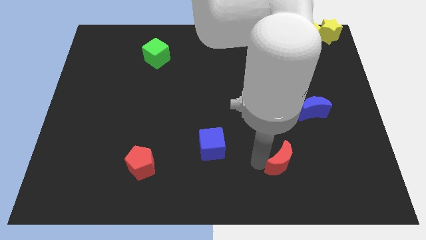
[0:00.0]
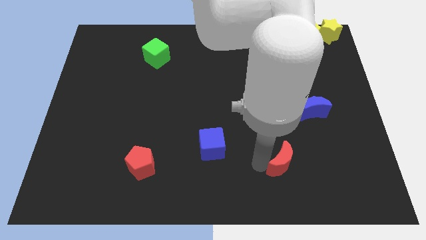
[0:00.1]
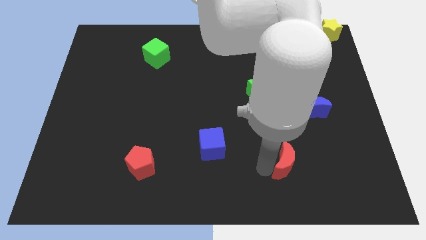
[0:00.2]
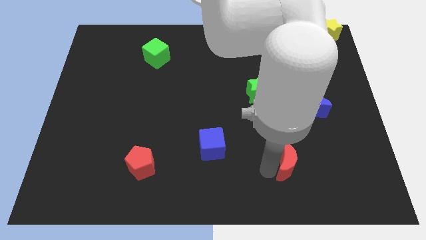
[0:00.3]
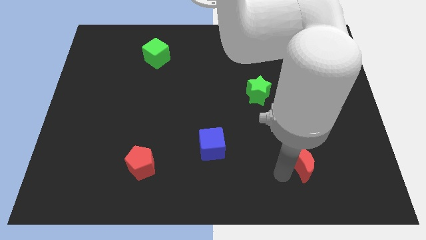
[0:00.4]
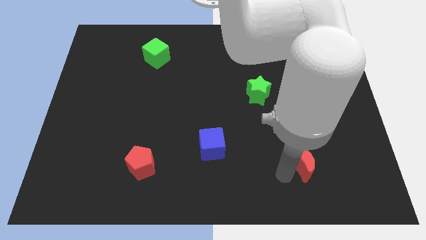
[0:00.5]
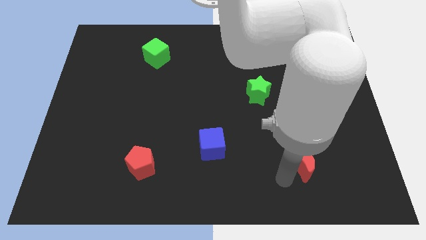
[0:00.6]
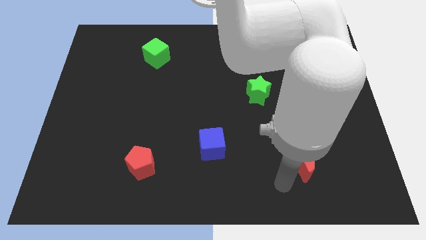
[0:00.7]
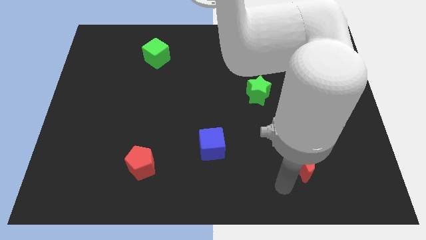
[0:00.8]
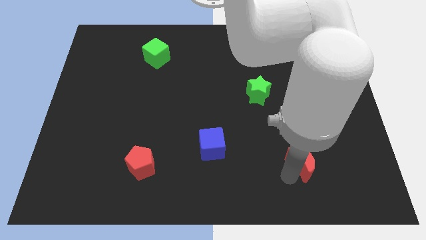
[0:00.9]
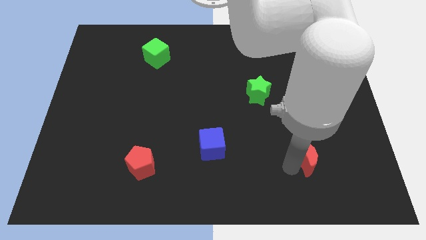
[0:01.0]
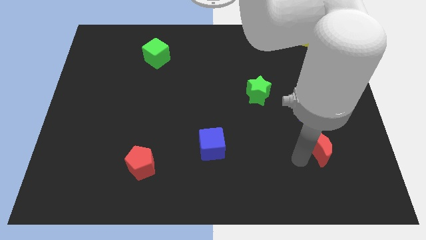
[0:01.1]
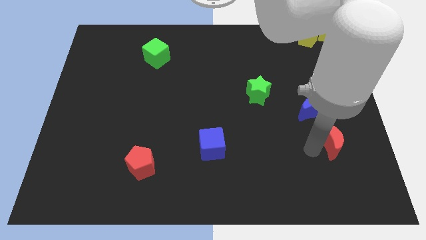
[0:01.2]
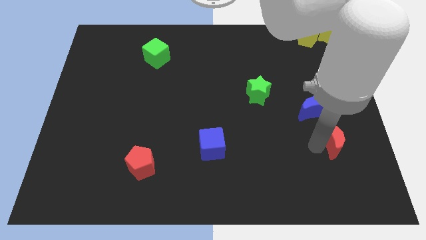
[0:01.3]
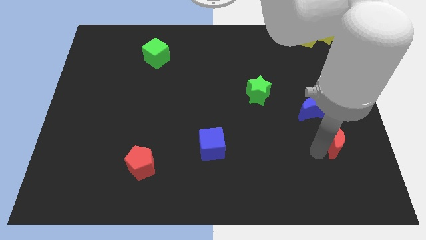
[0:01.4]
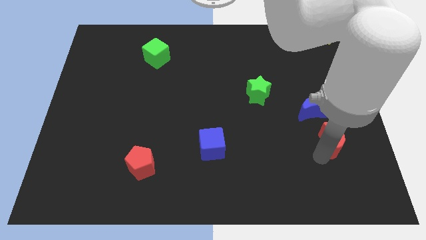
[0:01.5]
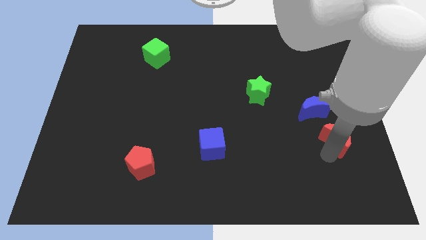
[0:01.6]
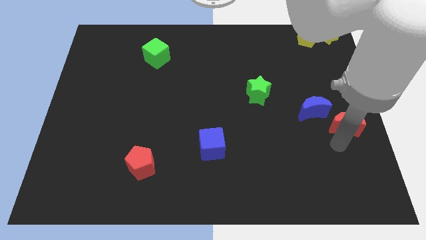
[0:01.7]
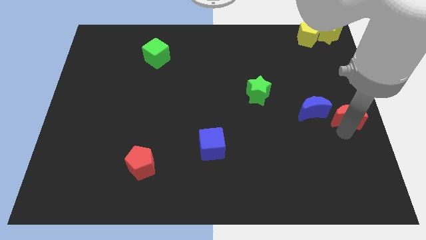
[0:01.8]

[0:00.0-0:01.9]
move the red crescent towards the blue crescent

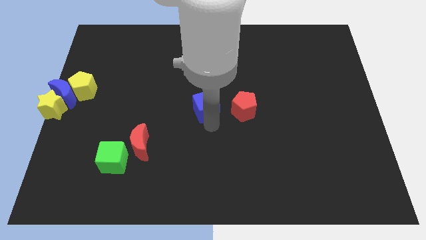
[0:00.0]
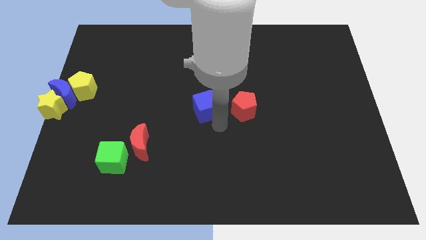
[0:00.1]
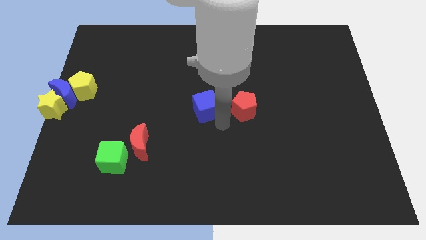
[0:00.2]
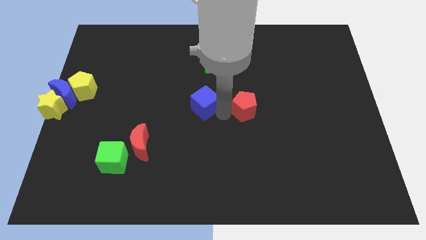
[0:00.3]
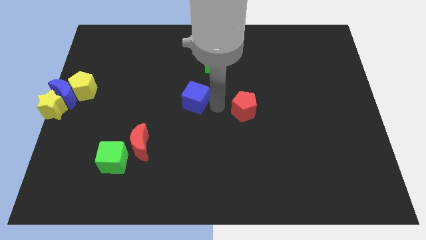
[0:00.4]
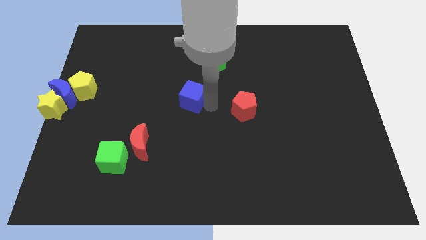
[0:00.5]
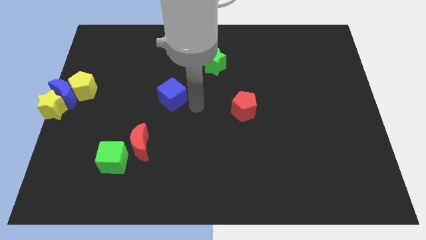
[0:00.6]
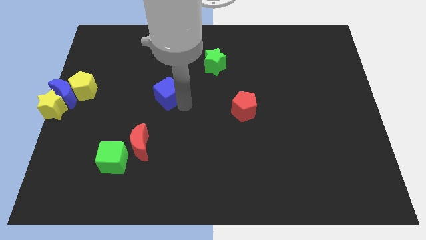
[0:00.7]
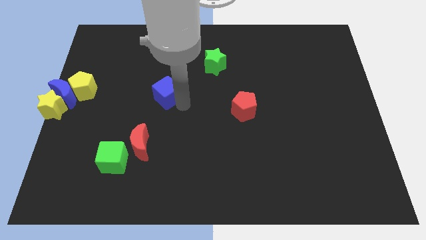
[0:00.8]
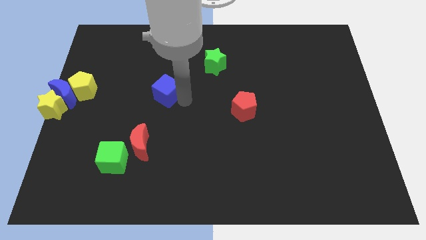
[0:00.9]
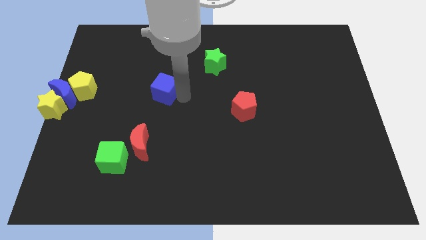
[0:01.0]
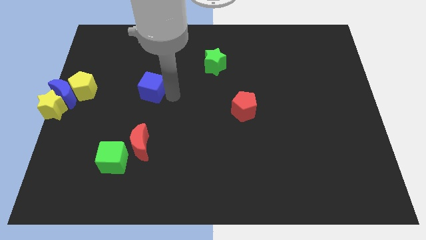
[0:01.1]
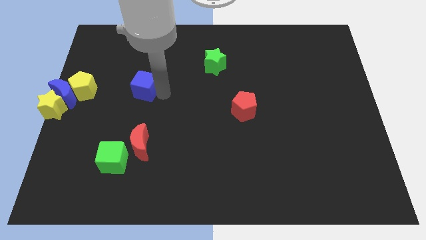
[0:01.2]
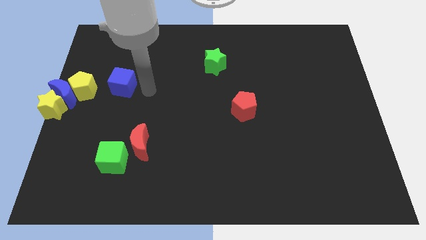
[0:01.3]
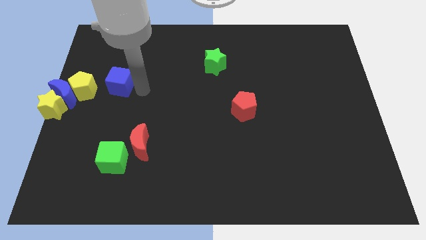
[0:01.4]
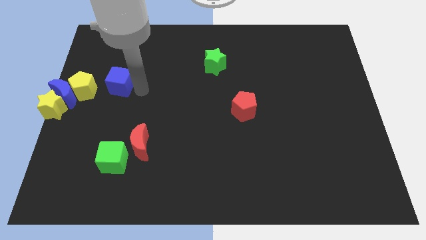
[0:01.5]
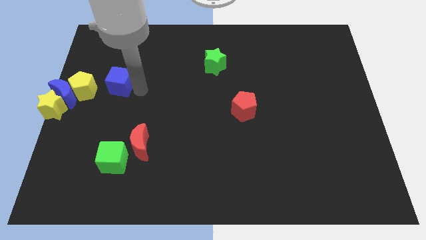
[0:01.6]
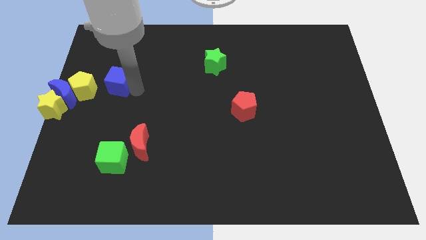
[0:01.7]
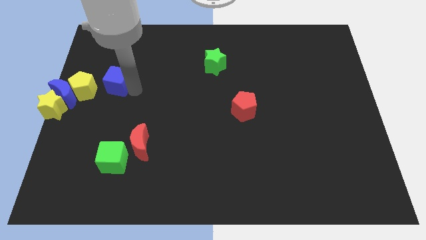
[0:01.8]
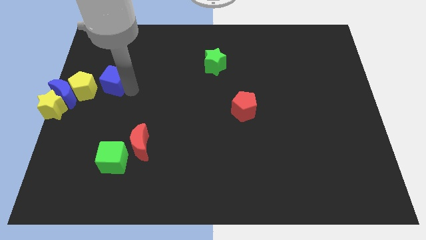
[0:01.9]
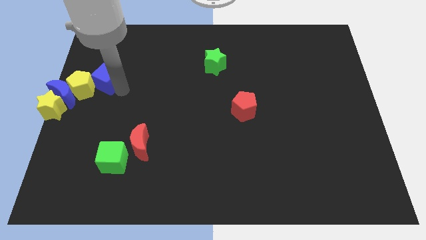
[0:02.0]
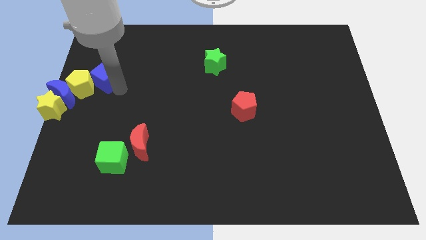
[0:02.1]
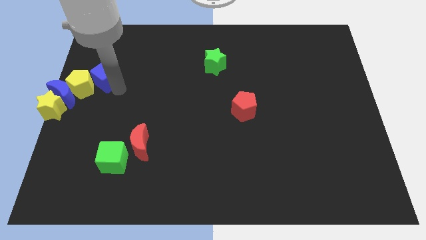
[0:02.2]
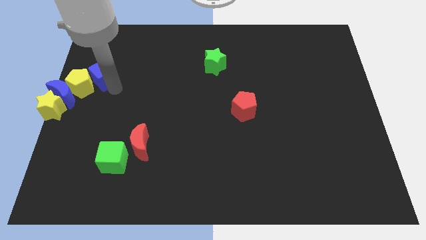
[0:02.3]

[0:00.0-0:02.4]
move the blue cube into the yellow pentagon

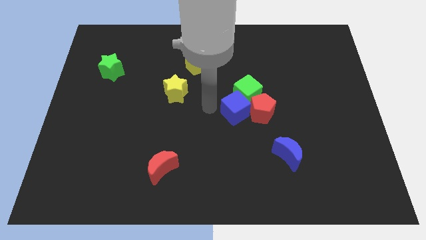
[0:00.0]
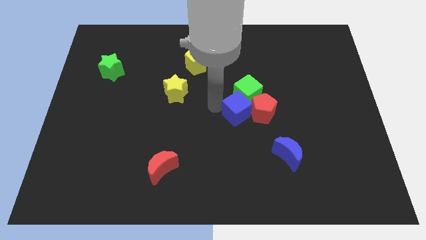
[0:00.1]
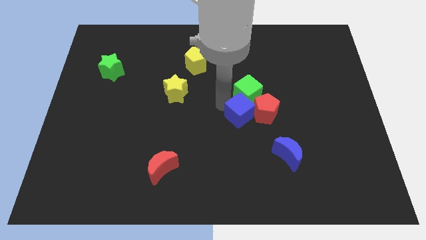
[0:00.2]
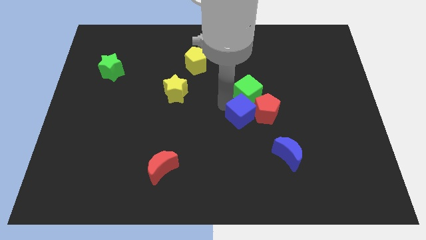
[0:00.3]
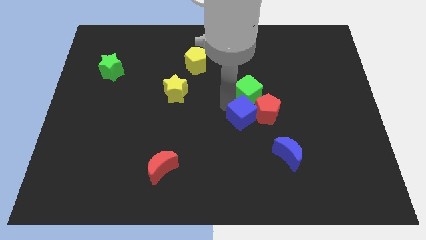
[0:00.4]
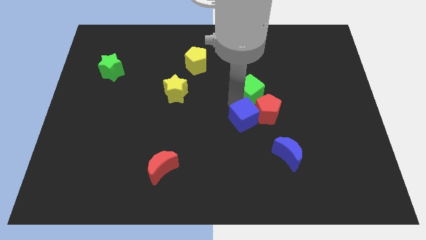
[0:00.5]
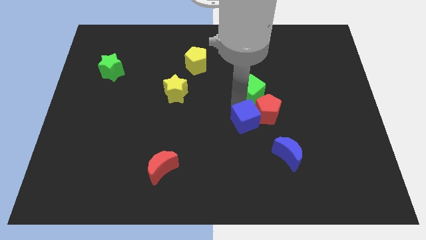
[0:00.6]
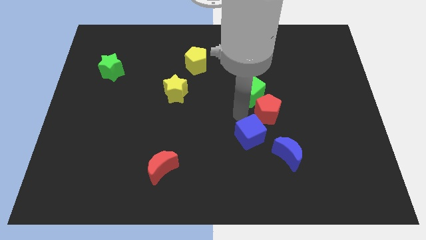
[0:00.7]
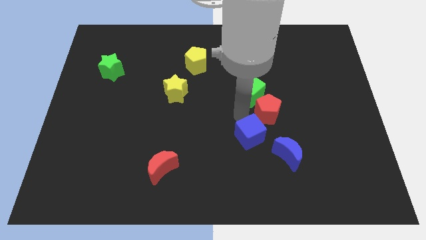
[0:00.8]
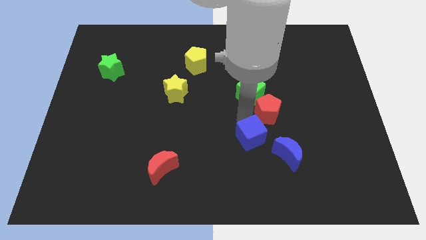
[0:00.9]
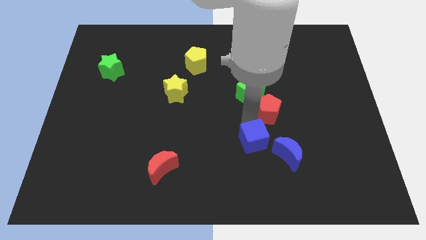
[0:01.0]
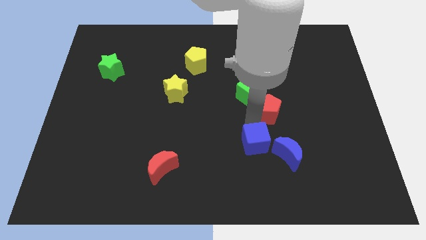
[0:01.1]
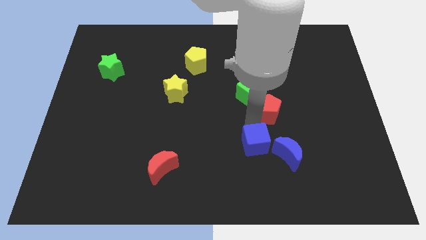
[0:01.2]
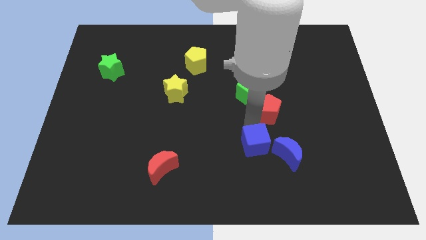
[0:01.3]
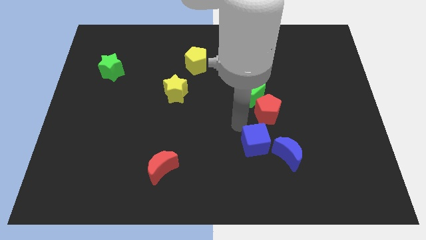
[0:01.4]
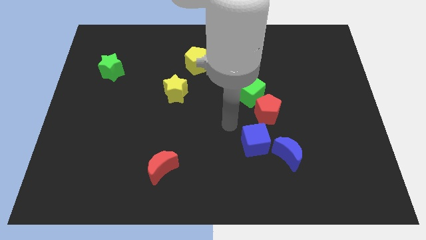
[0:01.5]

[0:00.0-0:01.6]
push the blue cube close to the blue crescent

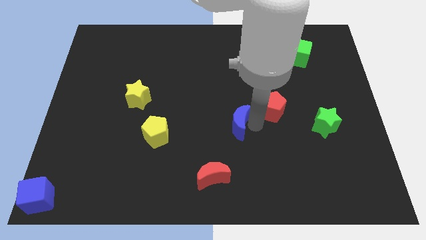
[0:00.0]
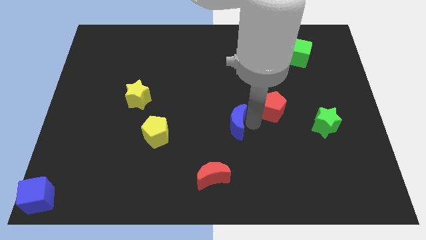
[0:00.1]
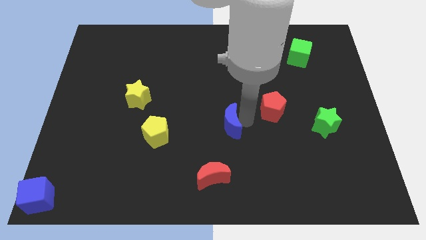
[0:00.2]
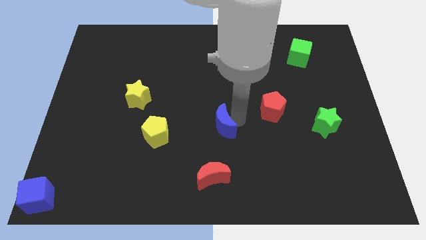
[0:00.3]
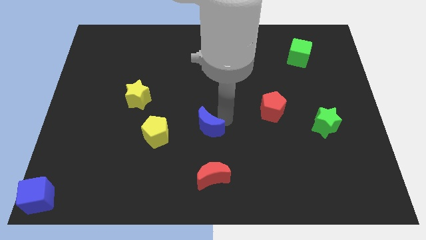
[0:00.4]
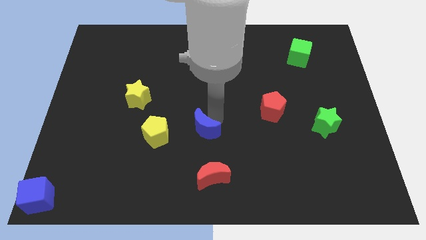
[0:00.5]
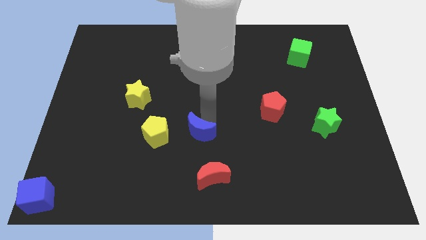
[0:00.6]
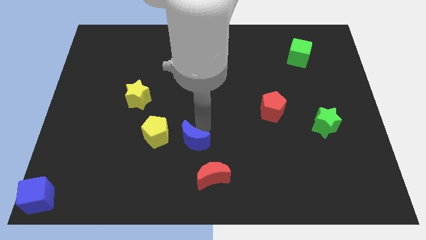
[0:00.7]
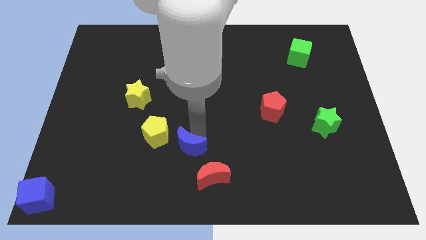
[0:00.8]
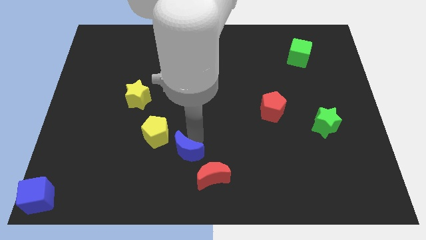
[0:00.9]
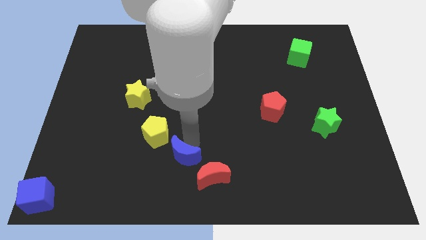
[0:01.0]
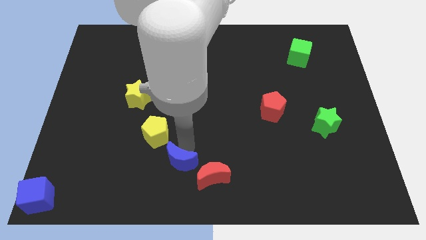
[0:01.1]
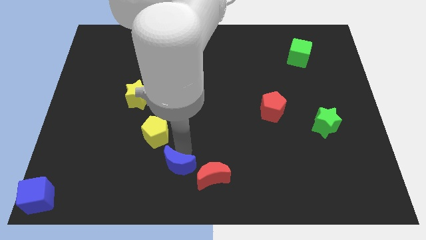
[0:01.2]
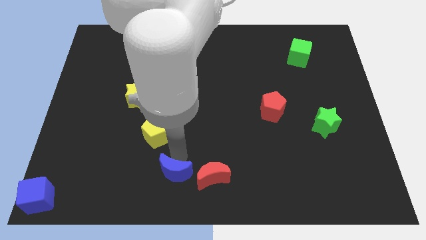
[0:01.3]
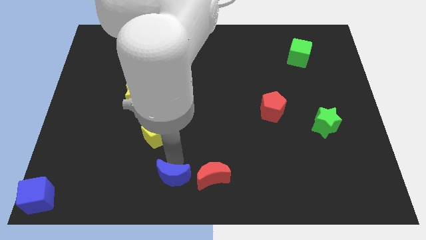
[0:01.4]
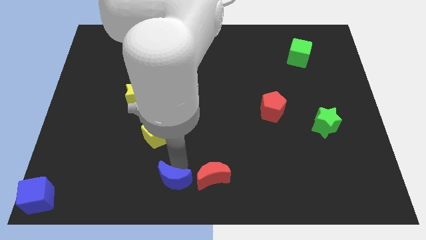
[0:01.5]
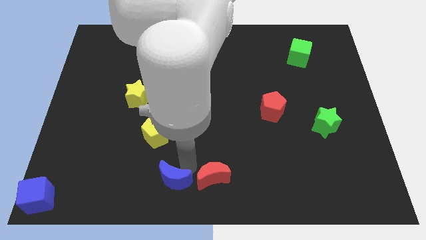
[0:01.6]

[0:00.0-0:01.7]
move the blue moon to the left of the red moon

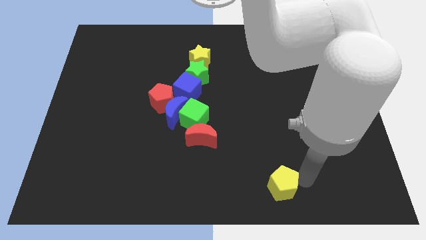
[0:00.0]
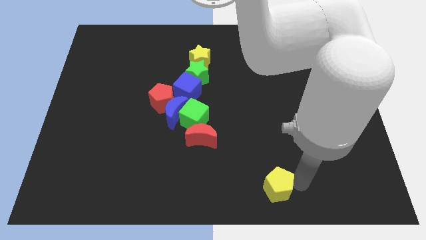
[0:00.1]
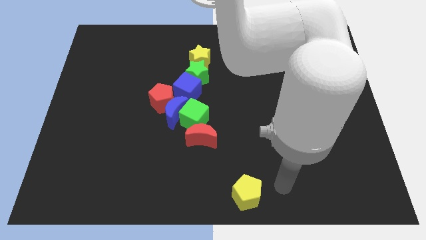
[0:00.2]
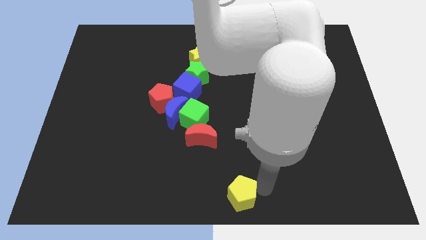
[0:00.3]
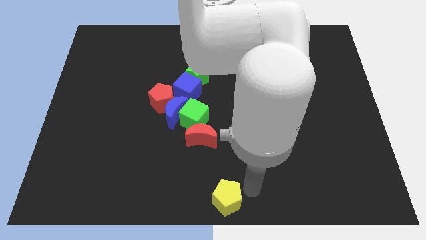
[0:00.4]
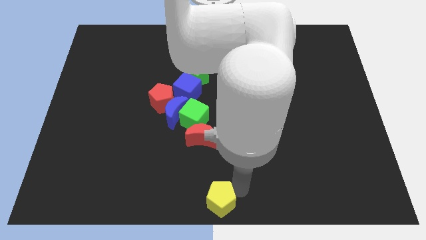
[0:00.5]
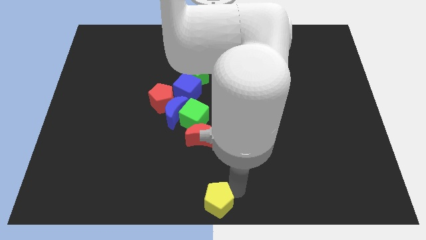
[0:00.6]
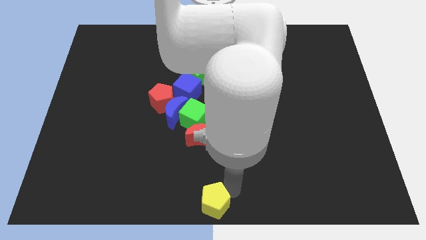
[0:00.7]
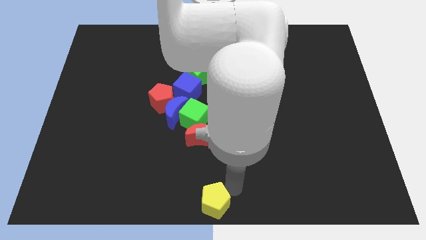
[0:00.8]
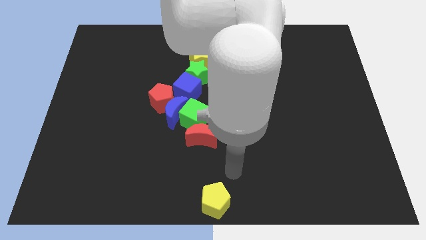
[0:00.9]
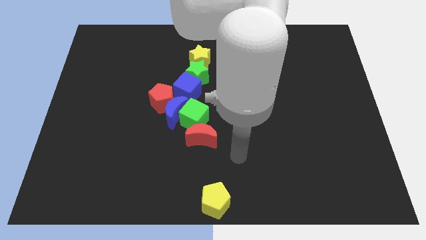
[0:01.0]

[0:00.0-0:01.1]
move yellow pentagon to the bottom center

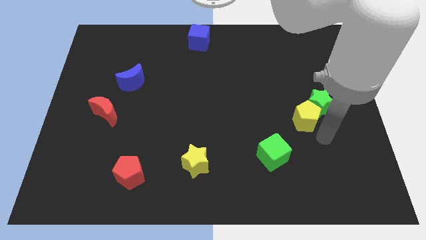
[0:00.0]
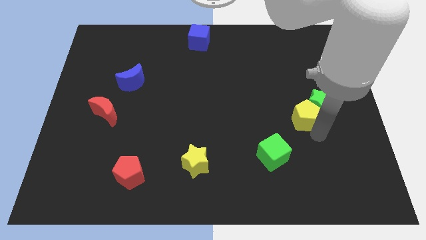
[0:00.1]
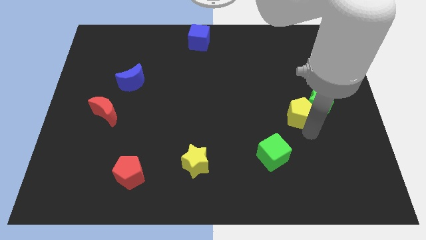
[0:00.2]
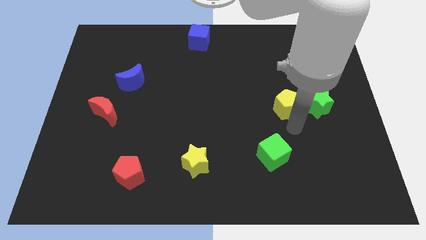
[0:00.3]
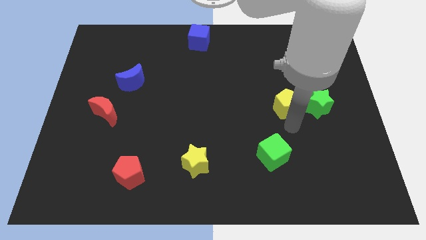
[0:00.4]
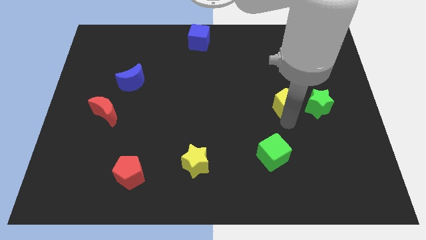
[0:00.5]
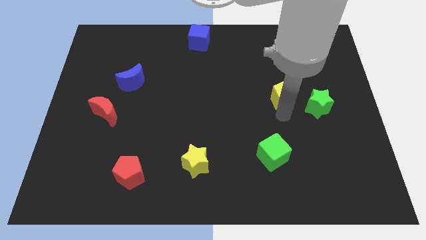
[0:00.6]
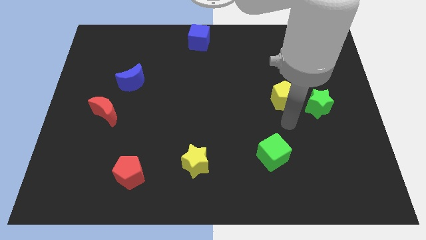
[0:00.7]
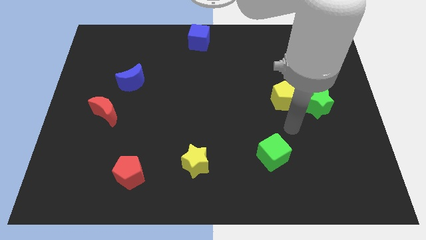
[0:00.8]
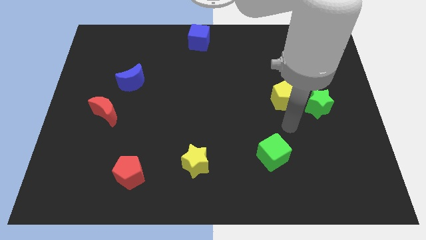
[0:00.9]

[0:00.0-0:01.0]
push the yellow pentagon diagonally left to the green star
